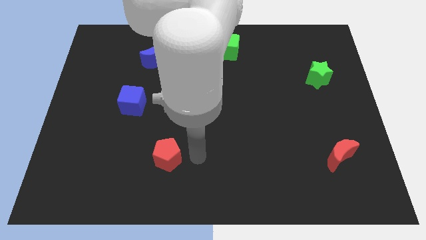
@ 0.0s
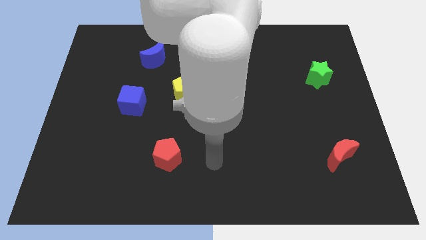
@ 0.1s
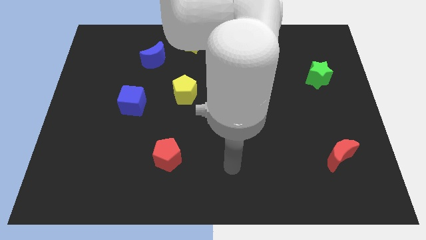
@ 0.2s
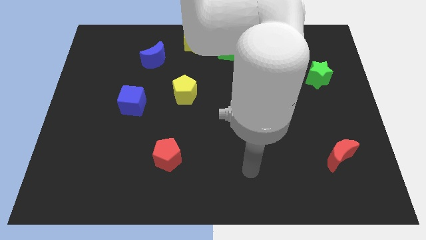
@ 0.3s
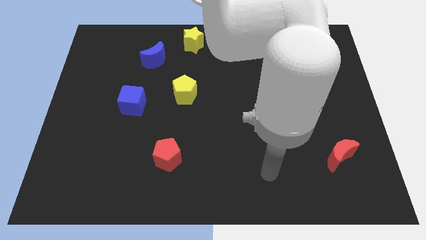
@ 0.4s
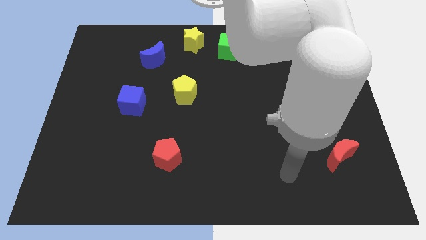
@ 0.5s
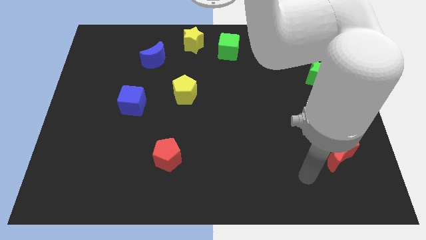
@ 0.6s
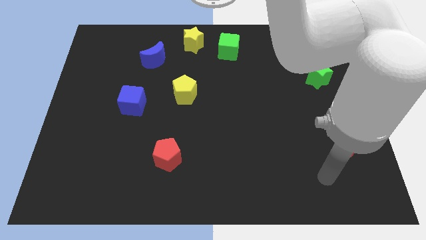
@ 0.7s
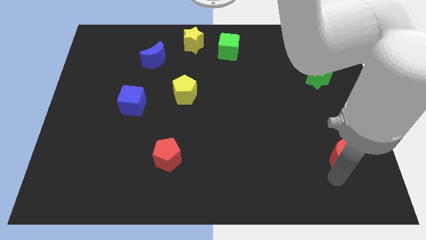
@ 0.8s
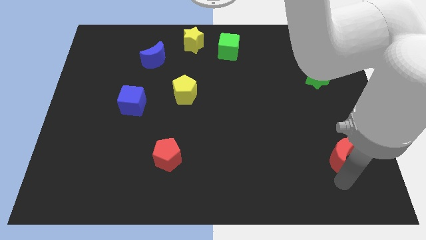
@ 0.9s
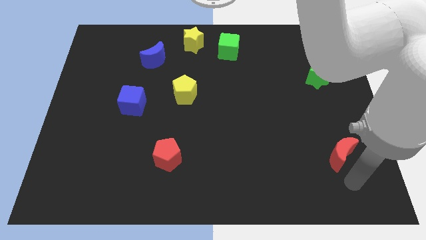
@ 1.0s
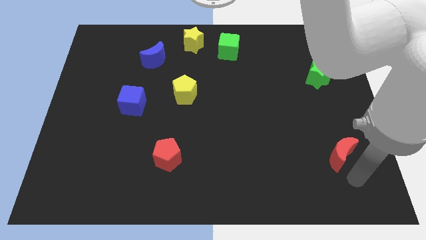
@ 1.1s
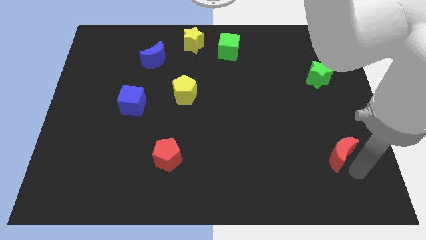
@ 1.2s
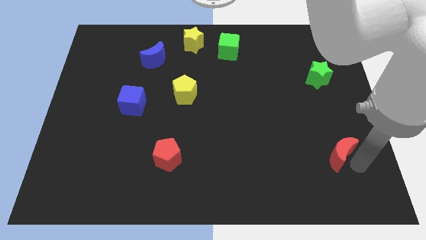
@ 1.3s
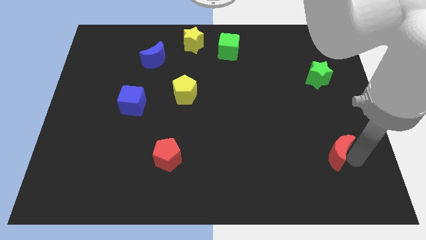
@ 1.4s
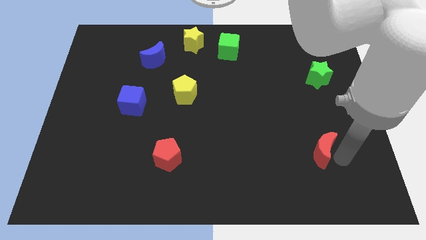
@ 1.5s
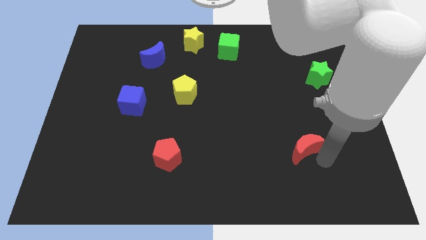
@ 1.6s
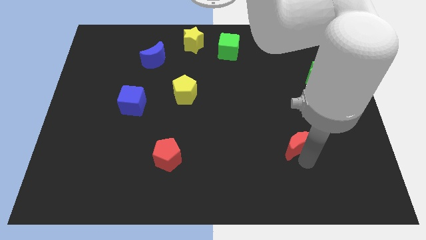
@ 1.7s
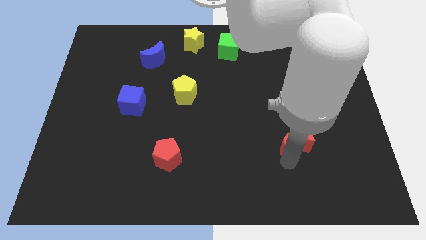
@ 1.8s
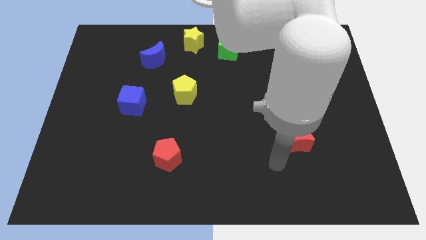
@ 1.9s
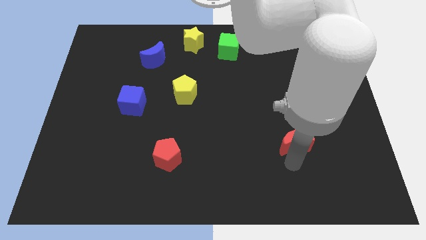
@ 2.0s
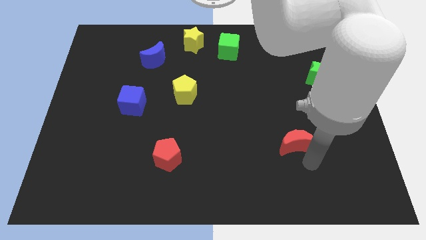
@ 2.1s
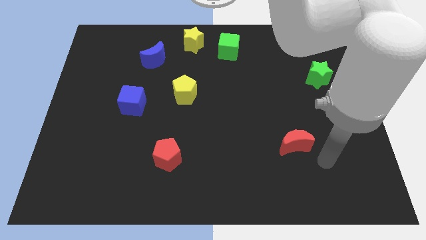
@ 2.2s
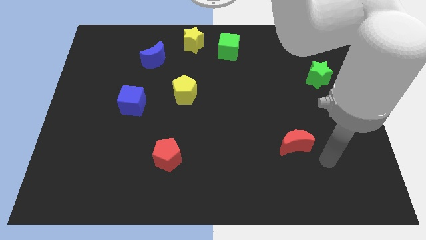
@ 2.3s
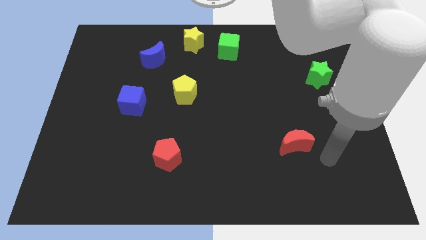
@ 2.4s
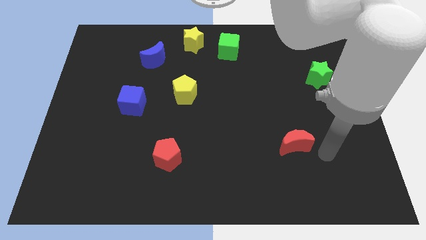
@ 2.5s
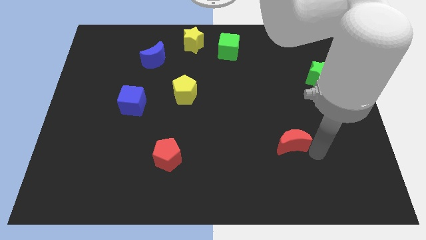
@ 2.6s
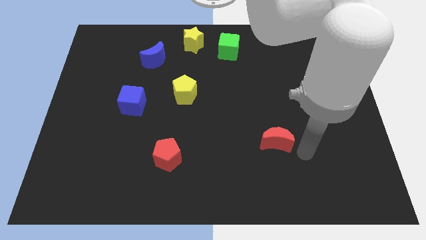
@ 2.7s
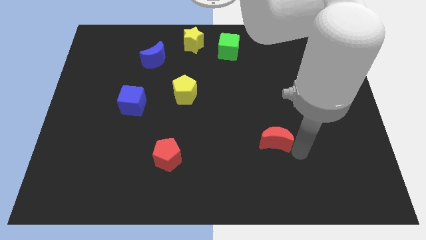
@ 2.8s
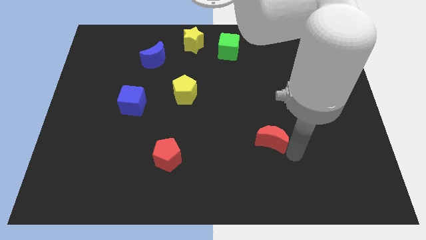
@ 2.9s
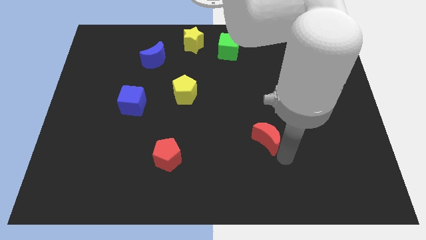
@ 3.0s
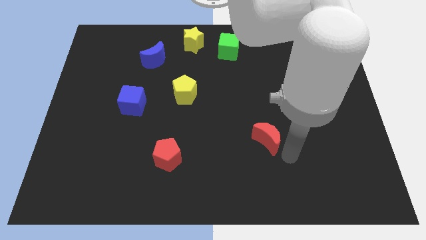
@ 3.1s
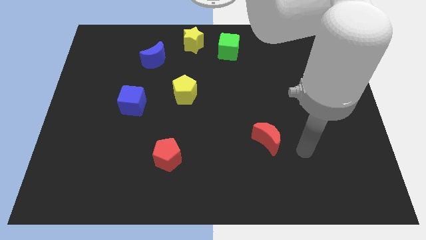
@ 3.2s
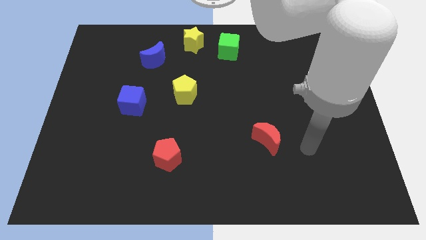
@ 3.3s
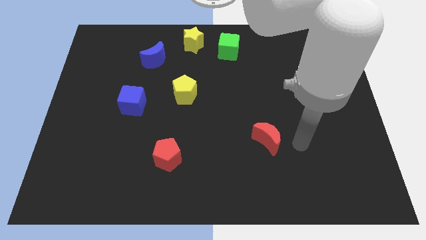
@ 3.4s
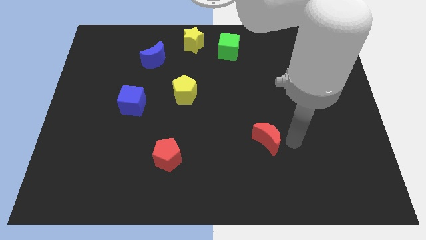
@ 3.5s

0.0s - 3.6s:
move the red moon diagonally to the green cube

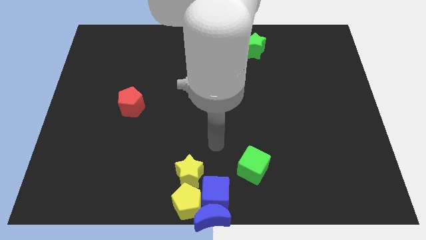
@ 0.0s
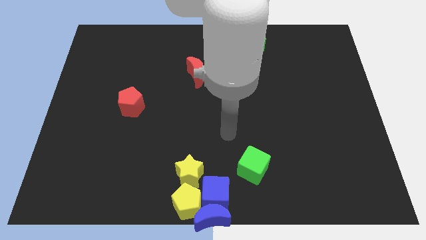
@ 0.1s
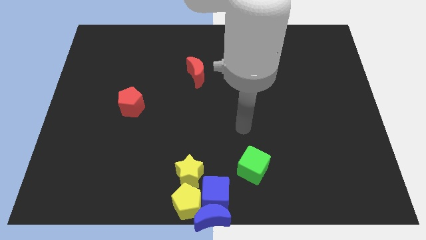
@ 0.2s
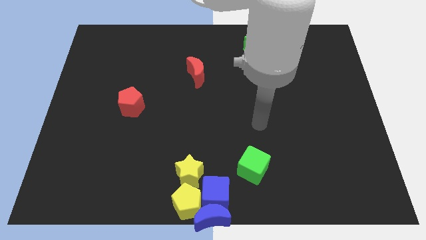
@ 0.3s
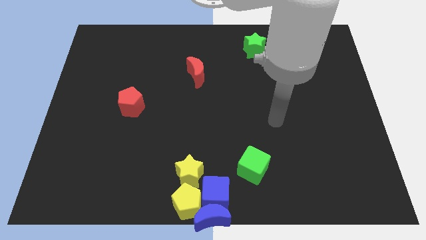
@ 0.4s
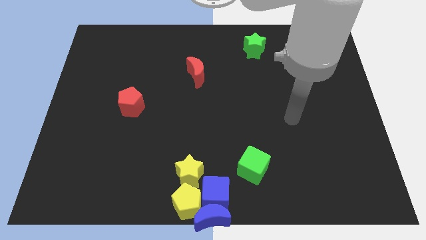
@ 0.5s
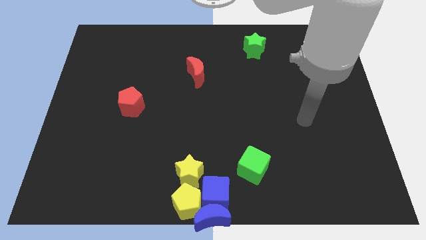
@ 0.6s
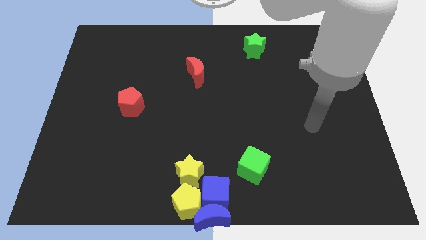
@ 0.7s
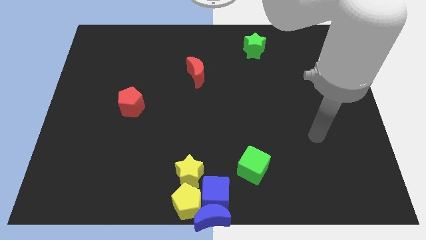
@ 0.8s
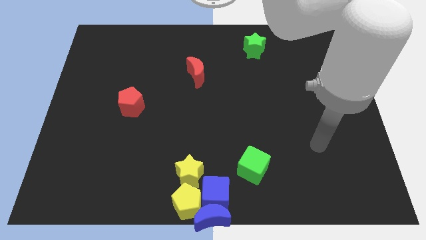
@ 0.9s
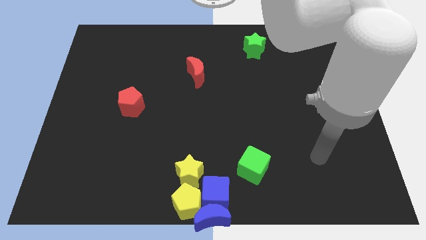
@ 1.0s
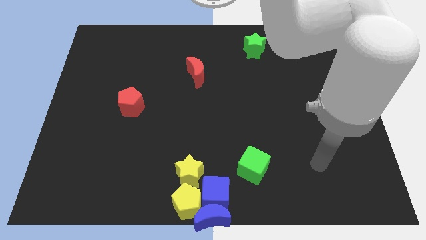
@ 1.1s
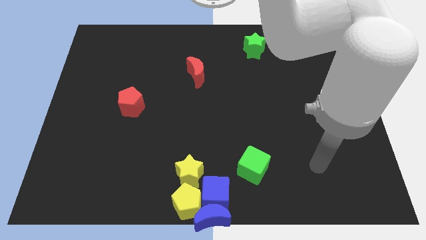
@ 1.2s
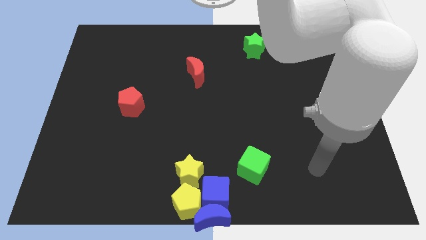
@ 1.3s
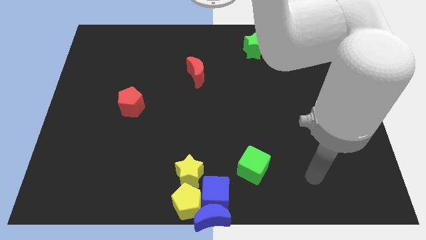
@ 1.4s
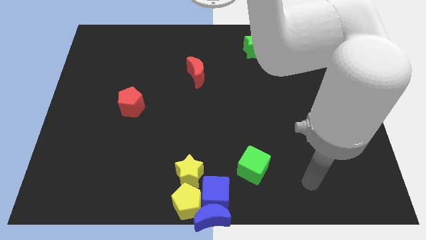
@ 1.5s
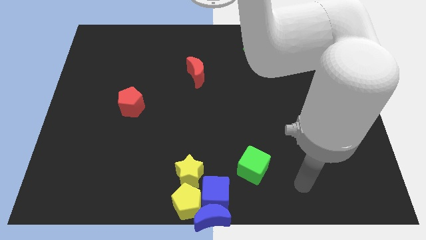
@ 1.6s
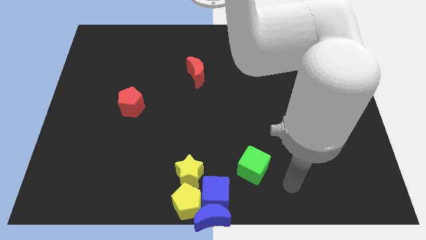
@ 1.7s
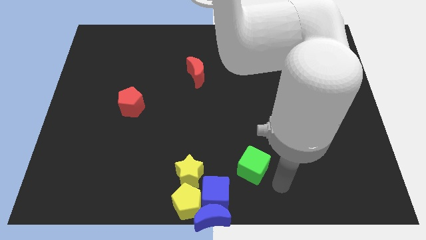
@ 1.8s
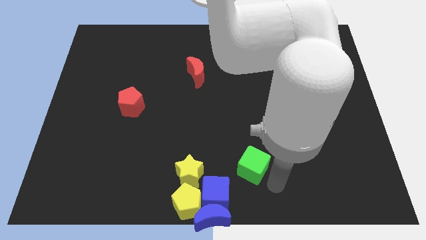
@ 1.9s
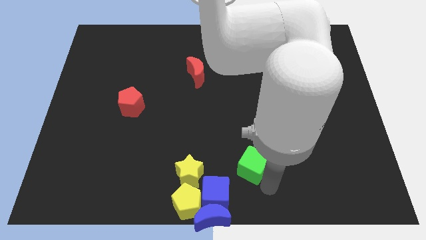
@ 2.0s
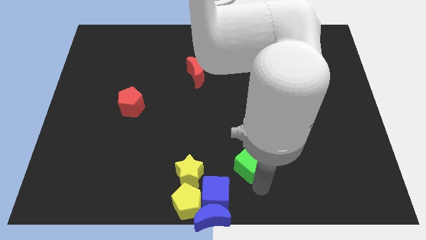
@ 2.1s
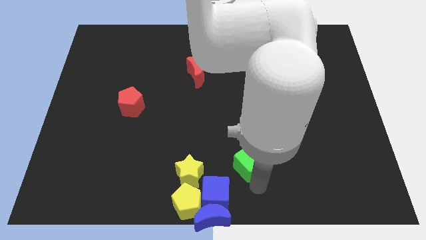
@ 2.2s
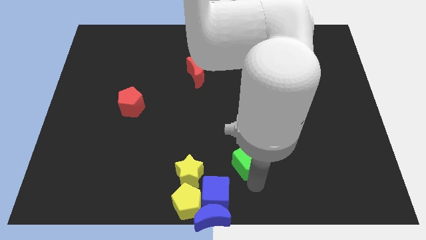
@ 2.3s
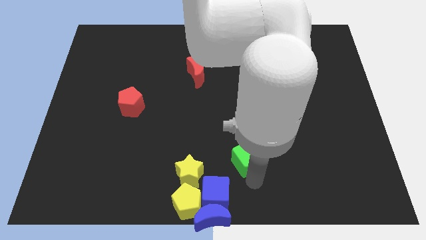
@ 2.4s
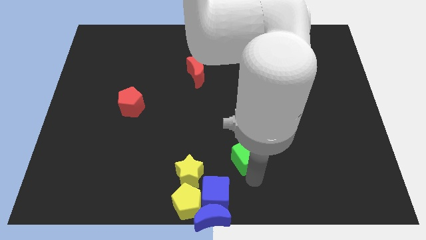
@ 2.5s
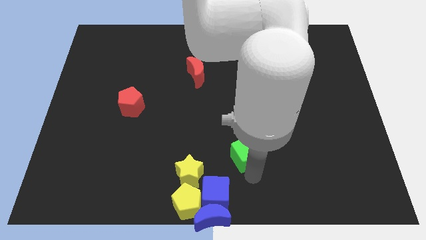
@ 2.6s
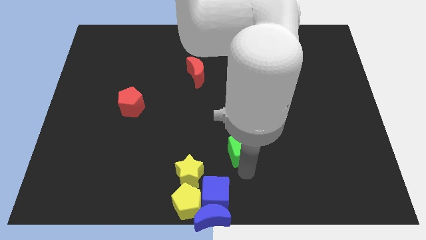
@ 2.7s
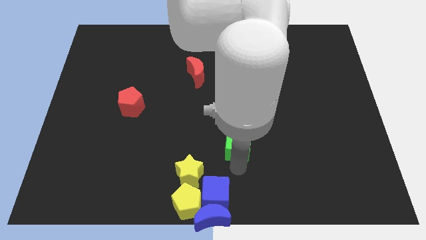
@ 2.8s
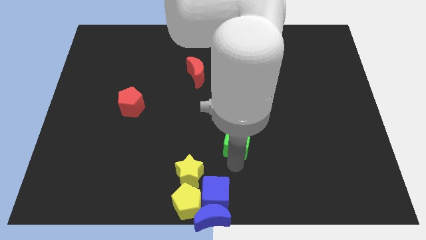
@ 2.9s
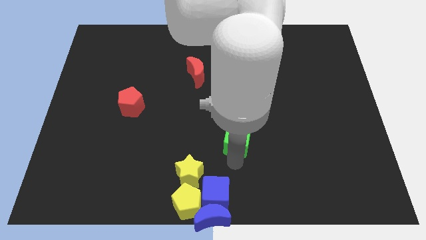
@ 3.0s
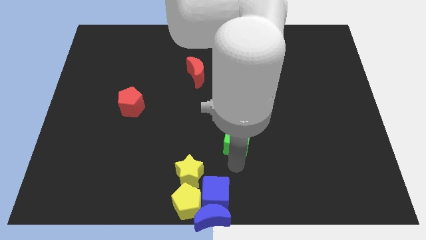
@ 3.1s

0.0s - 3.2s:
slightly move the green cube up

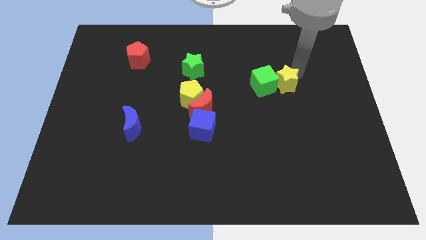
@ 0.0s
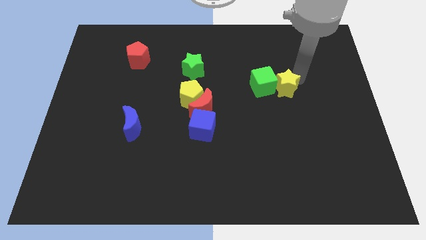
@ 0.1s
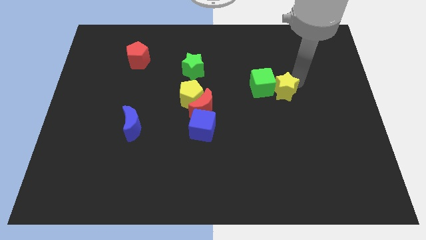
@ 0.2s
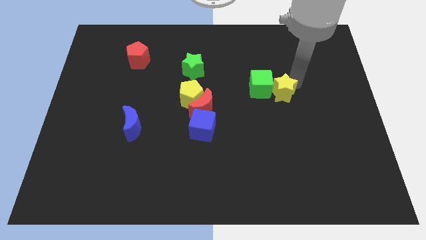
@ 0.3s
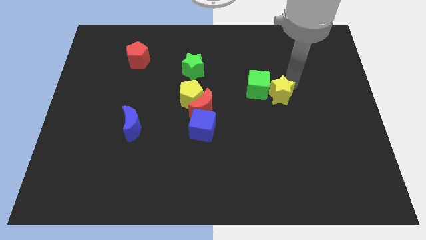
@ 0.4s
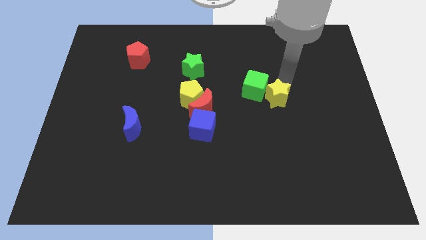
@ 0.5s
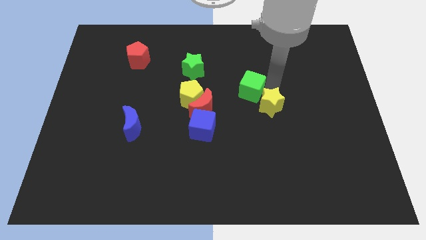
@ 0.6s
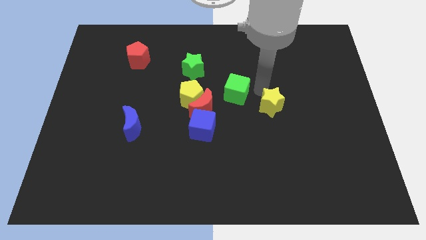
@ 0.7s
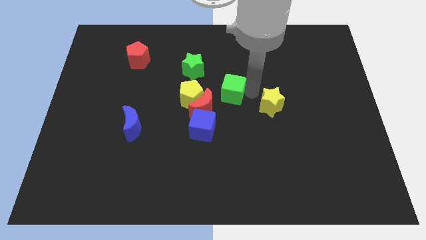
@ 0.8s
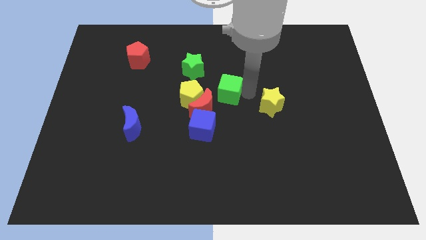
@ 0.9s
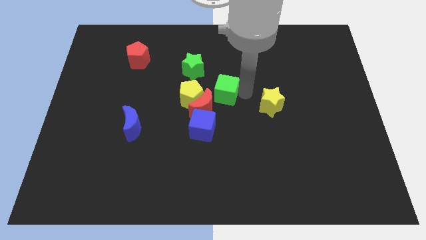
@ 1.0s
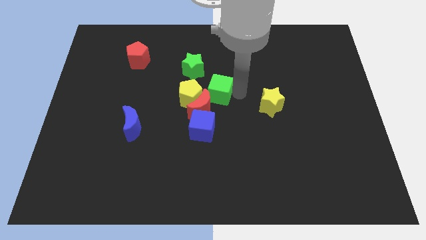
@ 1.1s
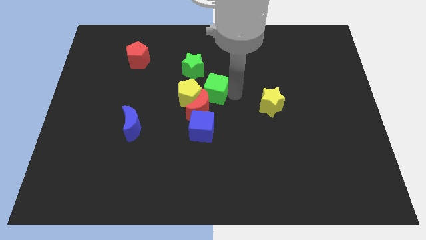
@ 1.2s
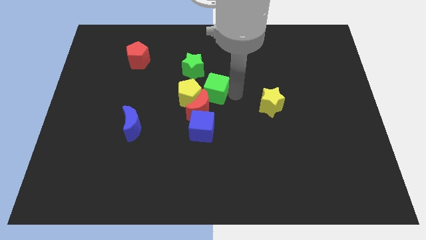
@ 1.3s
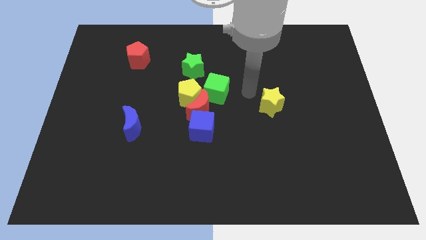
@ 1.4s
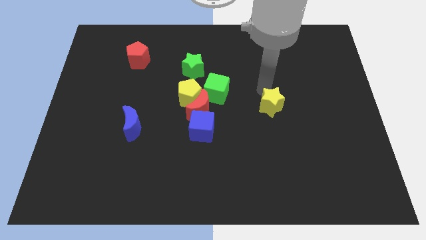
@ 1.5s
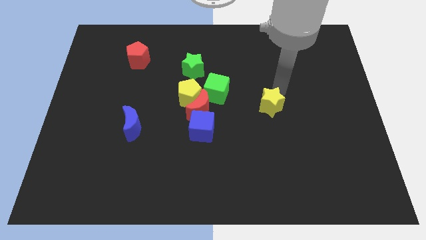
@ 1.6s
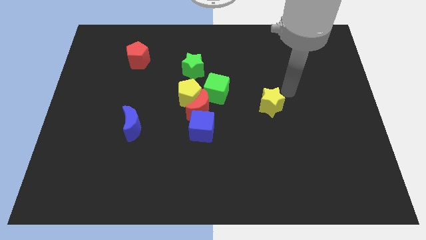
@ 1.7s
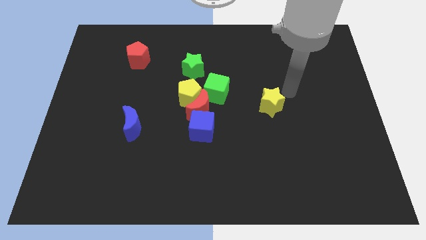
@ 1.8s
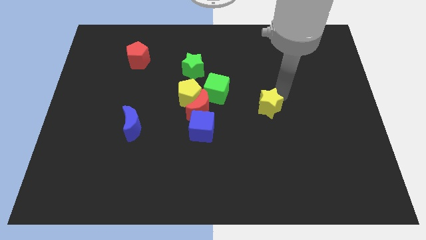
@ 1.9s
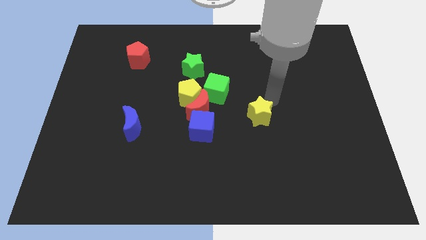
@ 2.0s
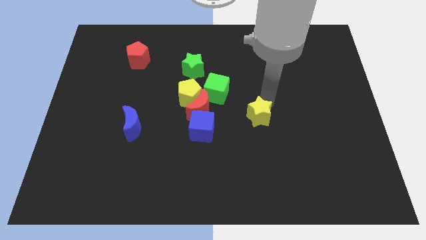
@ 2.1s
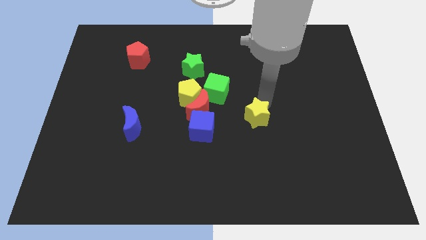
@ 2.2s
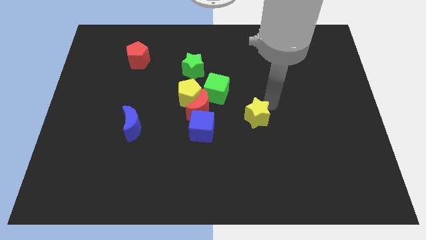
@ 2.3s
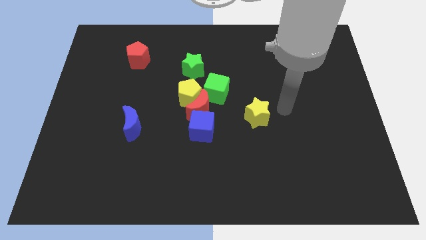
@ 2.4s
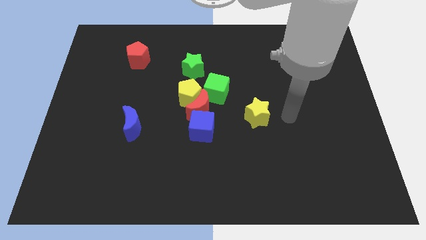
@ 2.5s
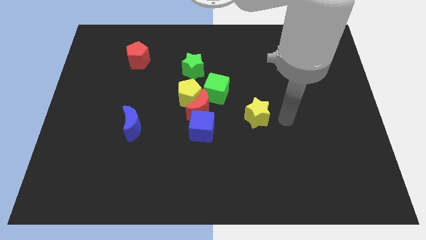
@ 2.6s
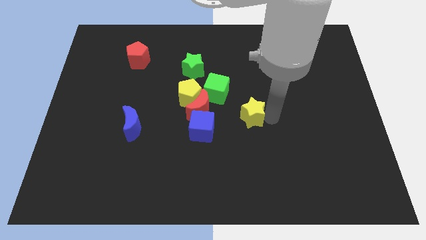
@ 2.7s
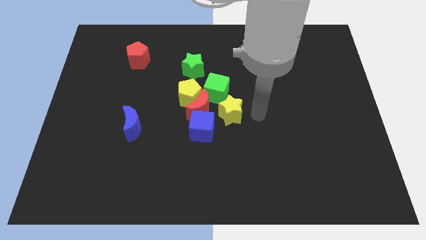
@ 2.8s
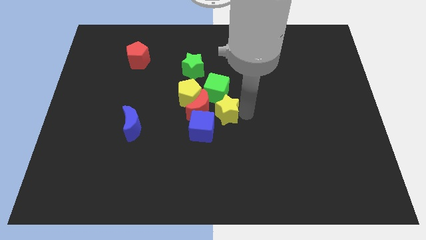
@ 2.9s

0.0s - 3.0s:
push the green cube into the yellow pentagon
